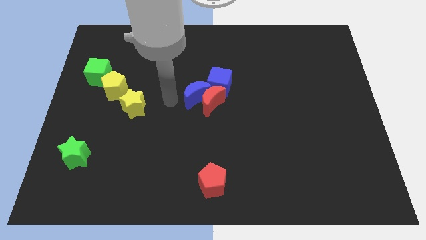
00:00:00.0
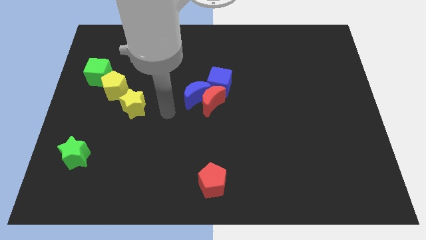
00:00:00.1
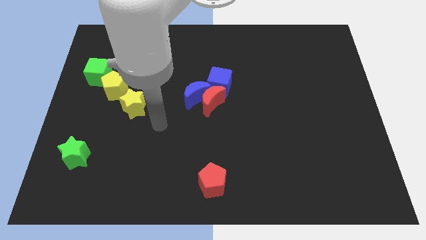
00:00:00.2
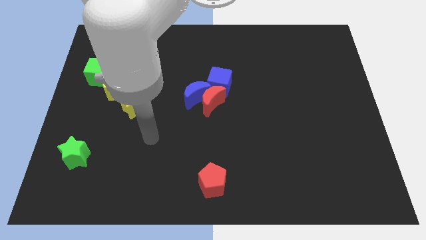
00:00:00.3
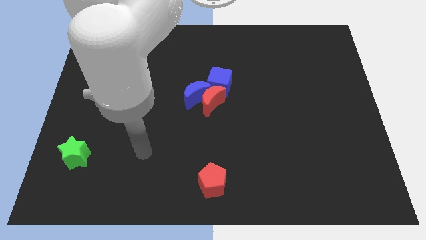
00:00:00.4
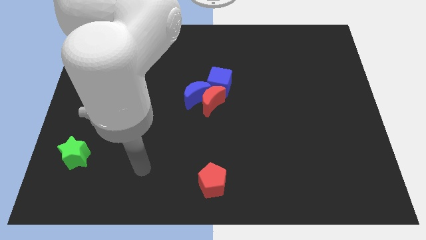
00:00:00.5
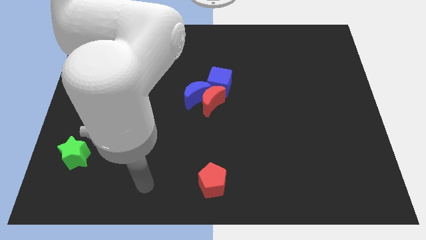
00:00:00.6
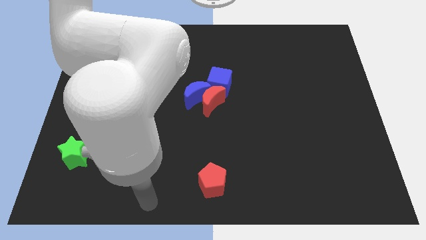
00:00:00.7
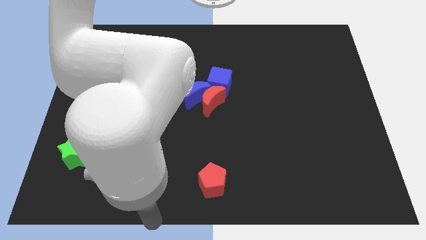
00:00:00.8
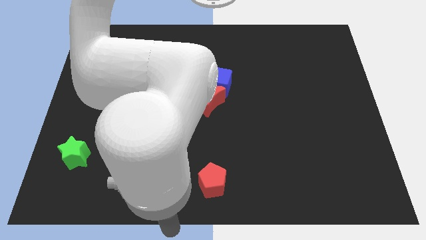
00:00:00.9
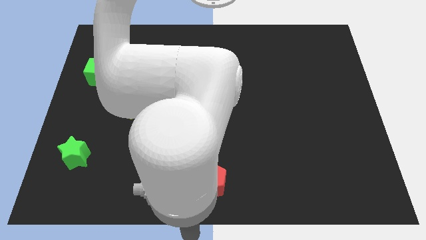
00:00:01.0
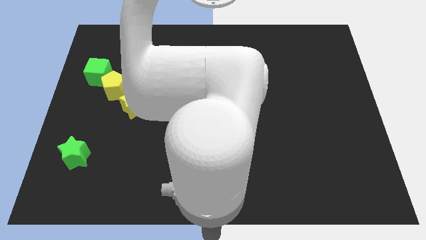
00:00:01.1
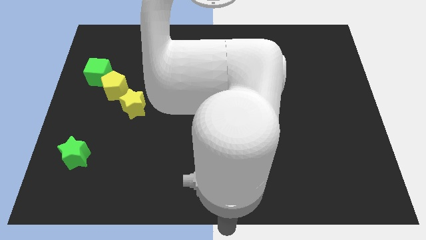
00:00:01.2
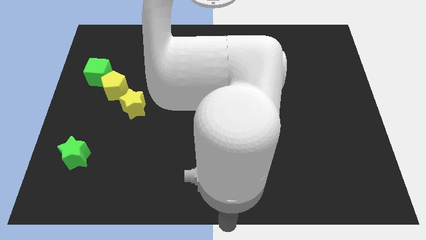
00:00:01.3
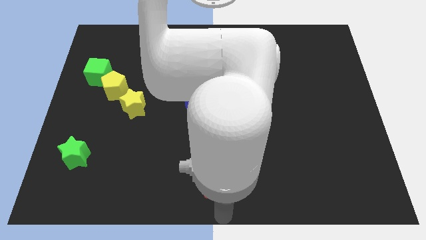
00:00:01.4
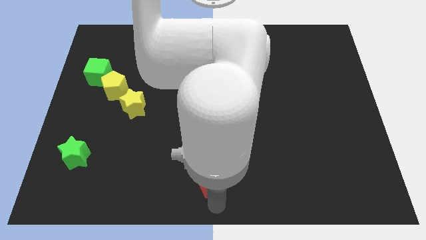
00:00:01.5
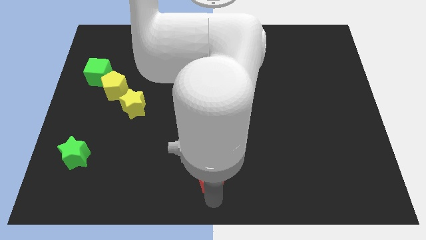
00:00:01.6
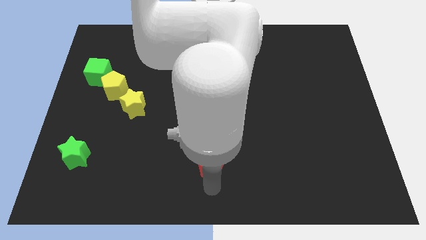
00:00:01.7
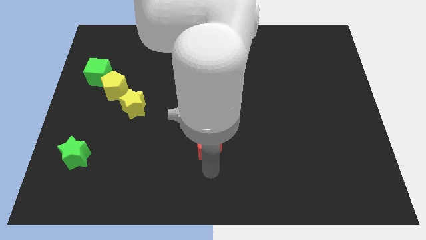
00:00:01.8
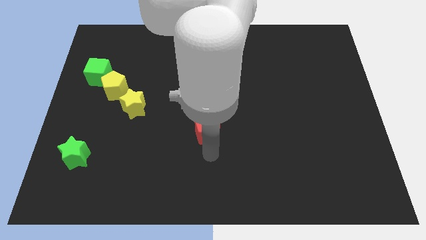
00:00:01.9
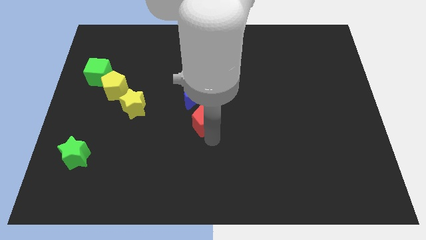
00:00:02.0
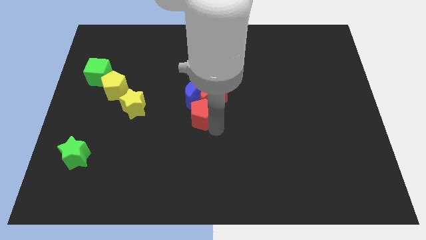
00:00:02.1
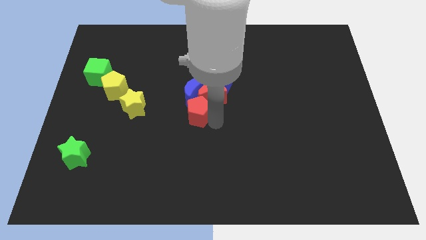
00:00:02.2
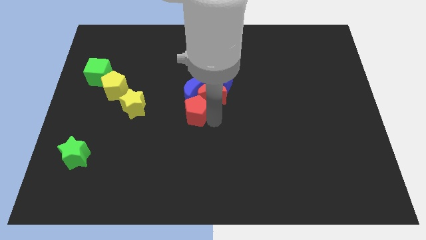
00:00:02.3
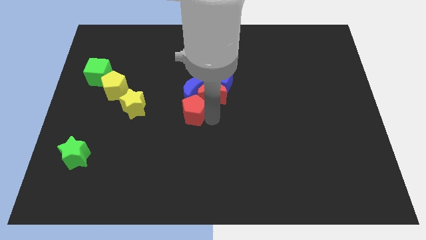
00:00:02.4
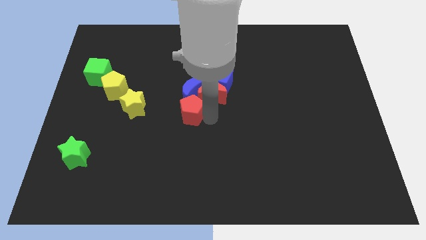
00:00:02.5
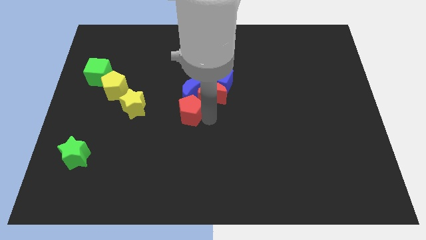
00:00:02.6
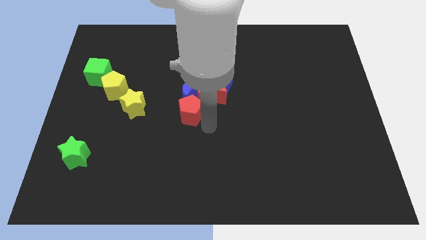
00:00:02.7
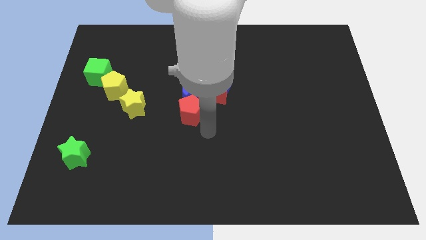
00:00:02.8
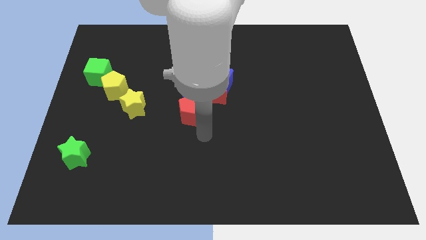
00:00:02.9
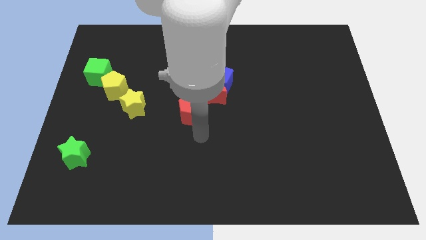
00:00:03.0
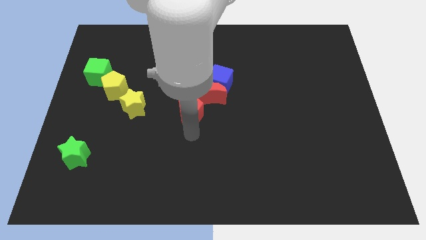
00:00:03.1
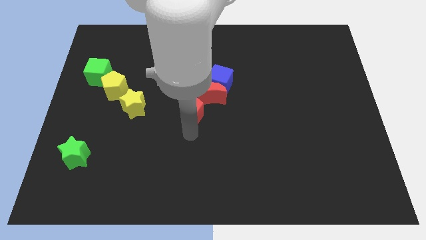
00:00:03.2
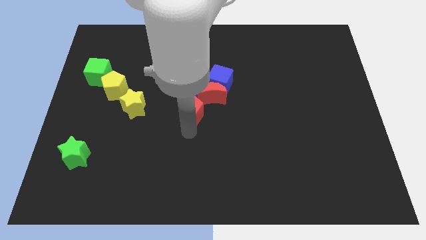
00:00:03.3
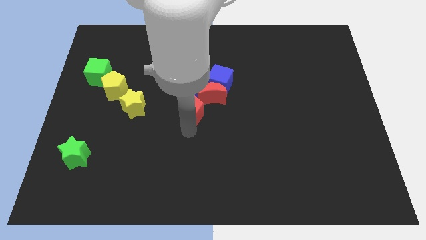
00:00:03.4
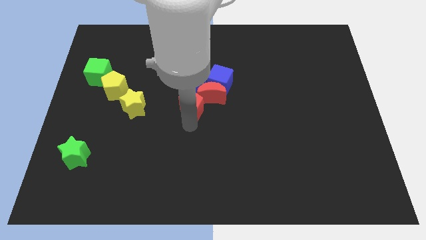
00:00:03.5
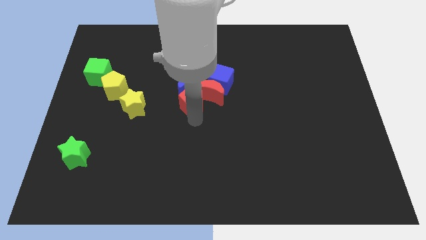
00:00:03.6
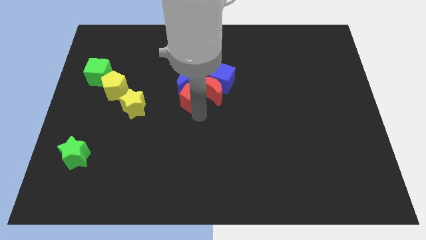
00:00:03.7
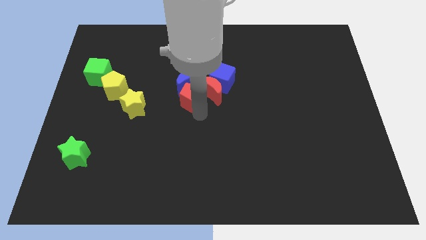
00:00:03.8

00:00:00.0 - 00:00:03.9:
push the red pentagon into the red moon

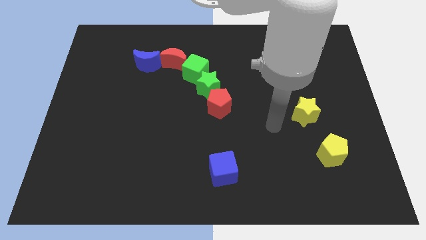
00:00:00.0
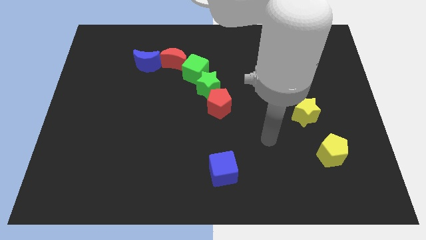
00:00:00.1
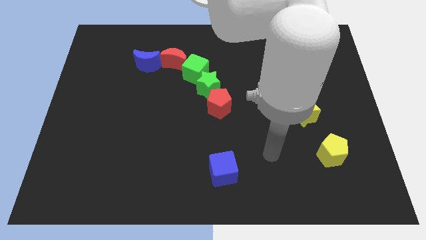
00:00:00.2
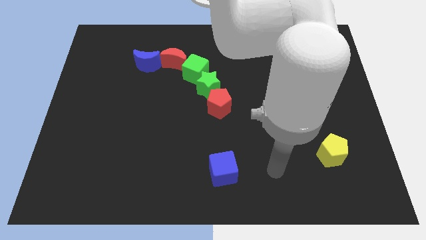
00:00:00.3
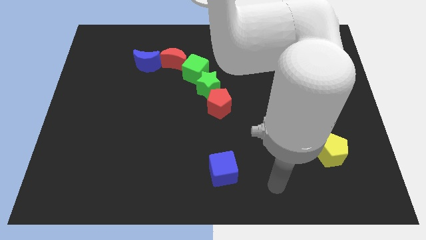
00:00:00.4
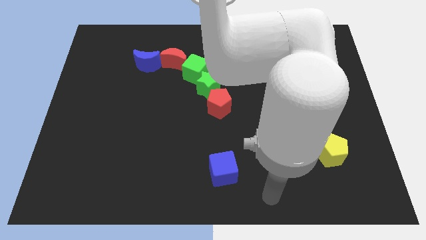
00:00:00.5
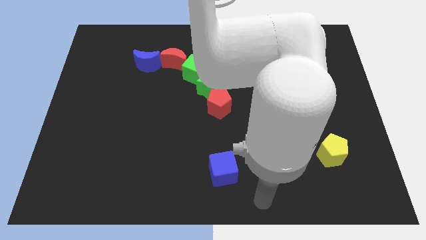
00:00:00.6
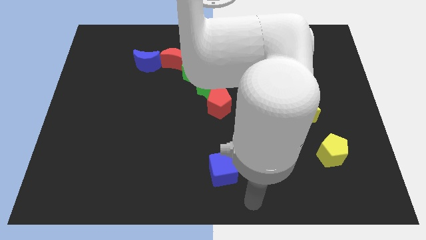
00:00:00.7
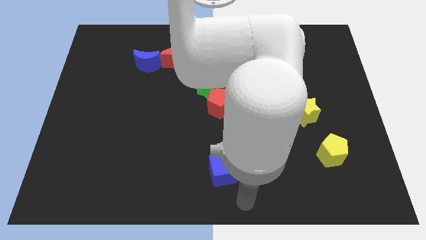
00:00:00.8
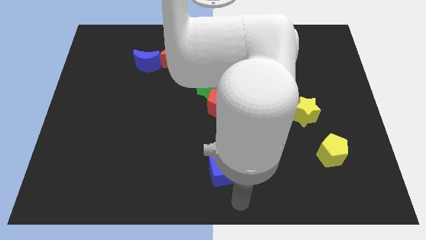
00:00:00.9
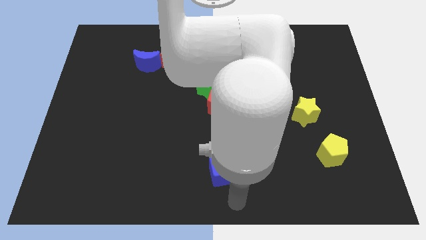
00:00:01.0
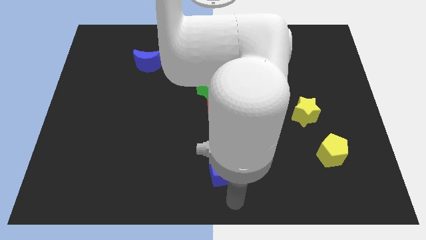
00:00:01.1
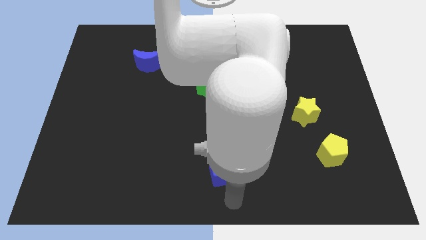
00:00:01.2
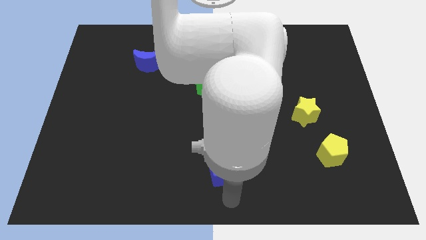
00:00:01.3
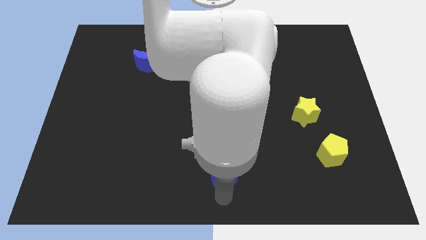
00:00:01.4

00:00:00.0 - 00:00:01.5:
point your arm at the bottom of the blue cube

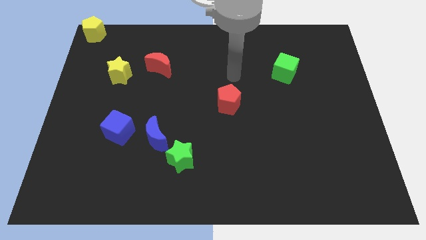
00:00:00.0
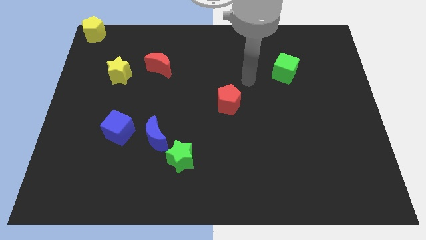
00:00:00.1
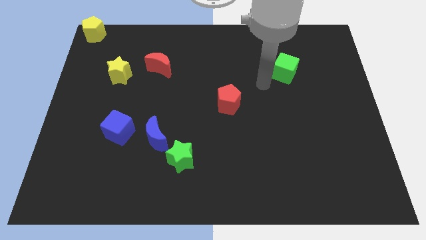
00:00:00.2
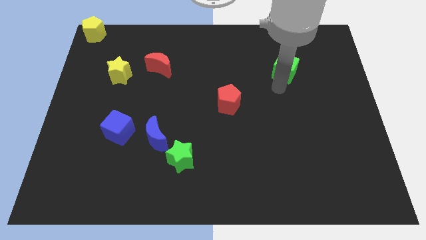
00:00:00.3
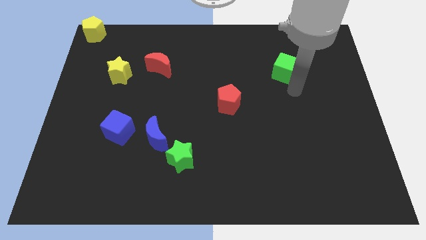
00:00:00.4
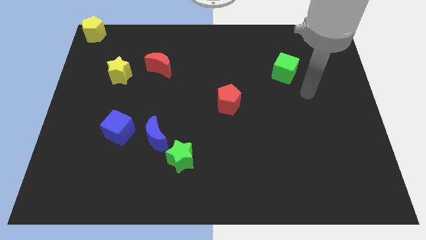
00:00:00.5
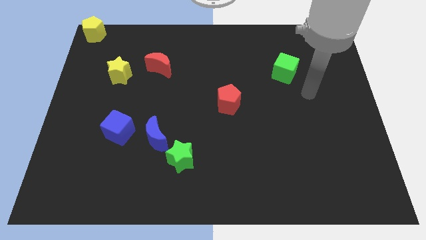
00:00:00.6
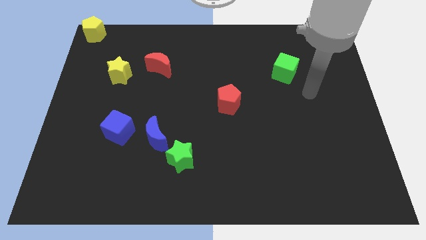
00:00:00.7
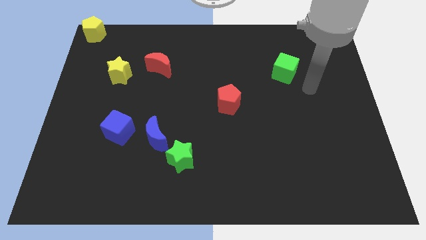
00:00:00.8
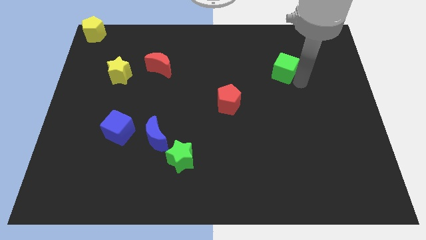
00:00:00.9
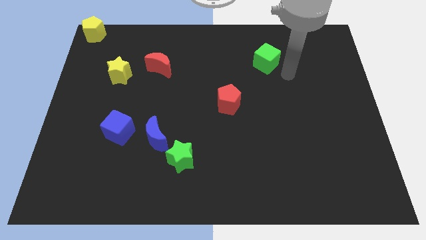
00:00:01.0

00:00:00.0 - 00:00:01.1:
move your arm towards the green cube

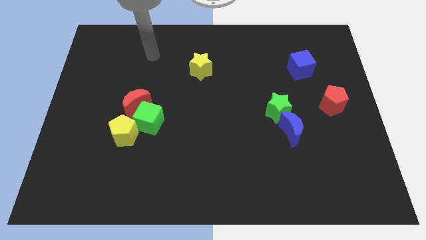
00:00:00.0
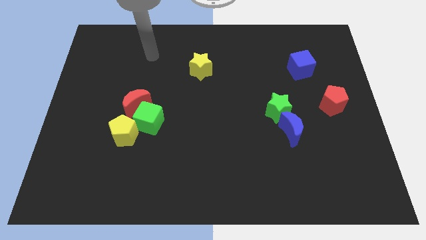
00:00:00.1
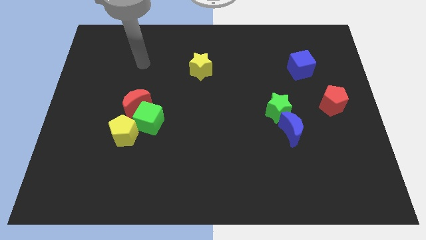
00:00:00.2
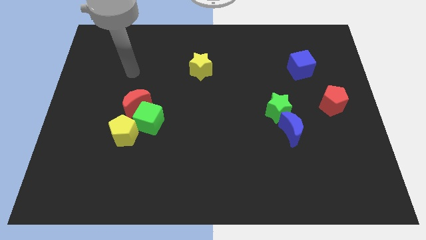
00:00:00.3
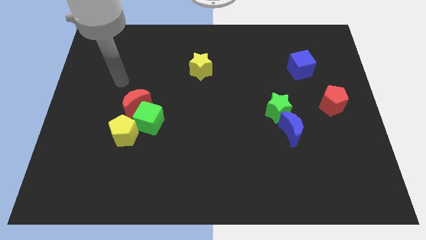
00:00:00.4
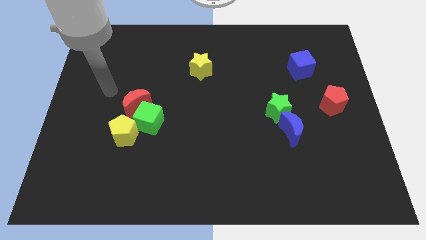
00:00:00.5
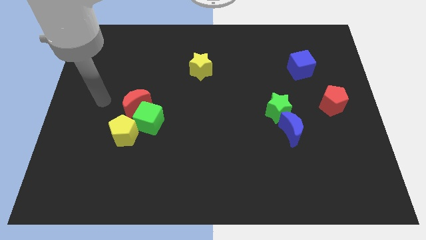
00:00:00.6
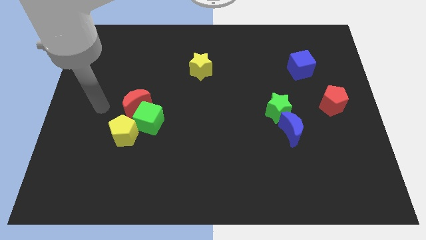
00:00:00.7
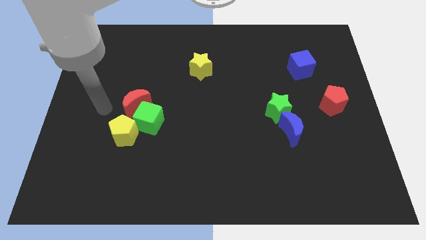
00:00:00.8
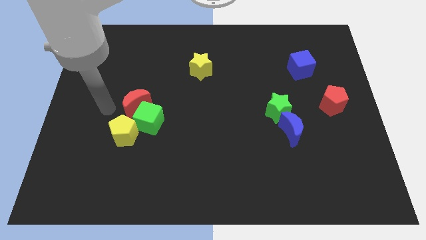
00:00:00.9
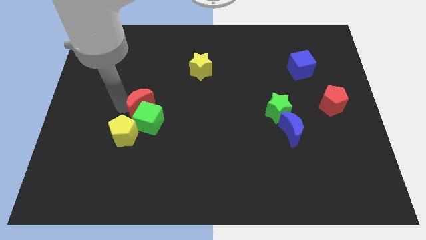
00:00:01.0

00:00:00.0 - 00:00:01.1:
place the arm near the red moon

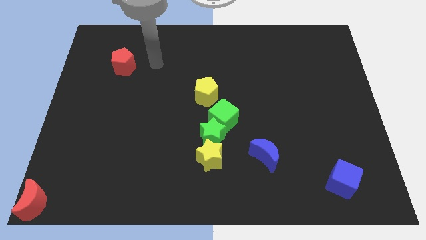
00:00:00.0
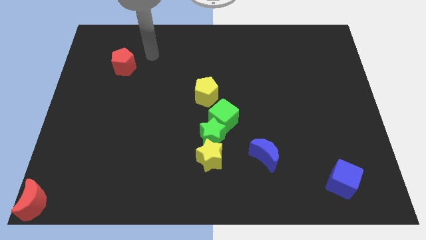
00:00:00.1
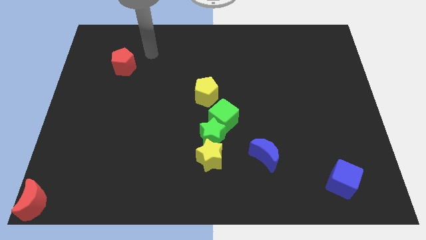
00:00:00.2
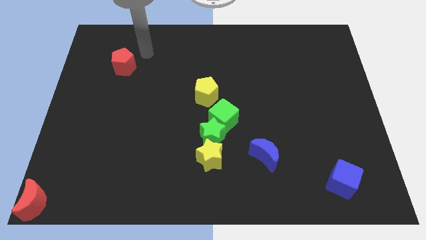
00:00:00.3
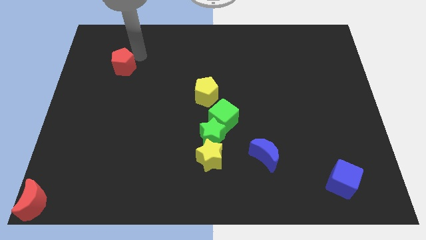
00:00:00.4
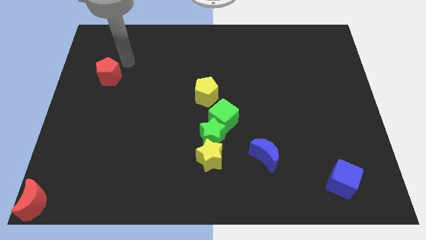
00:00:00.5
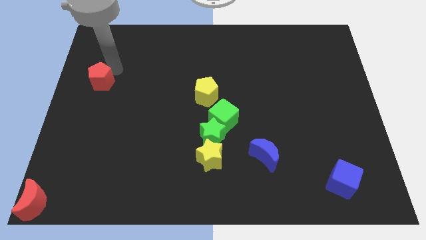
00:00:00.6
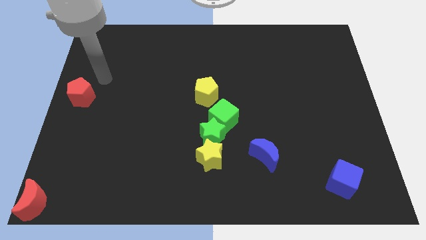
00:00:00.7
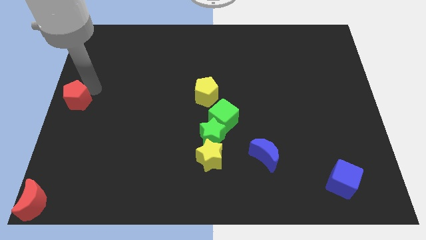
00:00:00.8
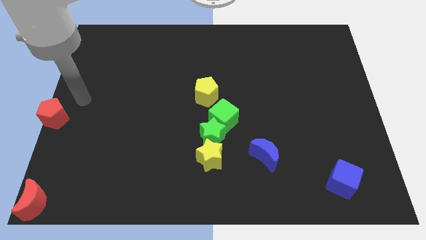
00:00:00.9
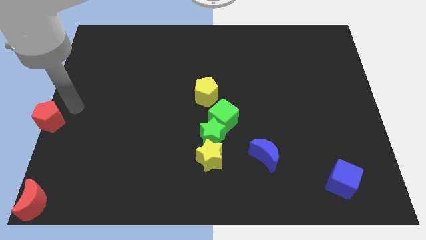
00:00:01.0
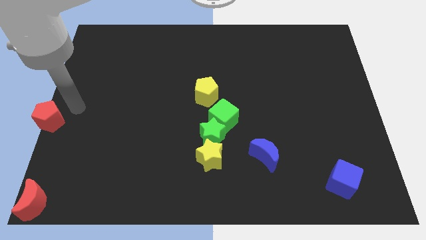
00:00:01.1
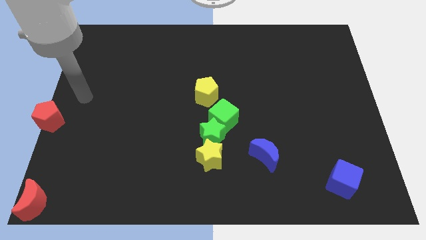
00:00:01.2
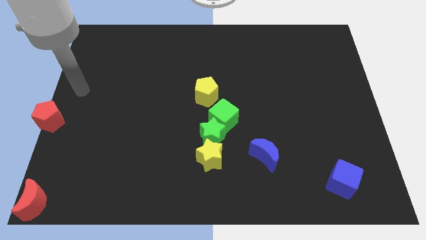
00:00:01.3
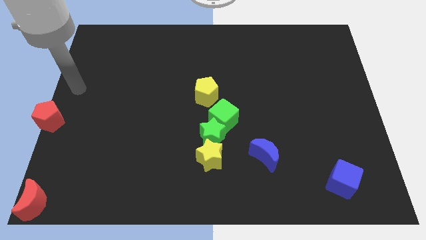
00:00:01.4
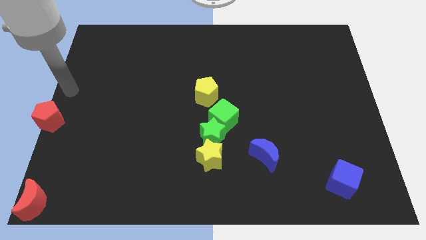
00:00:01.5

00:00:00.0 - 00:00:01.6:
move red pentagon to the center left side
